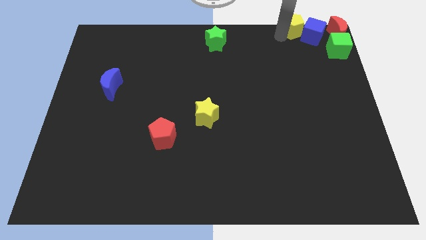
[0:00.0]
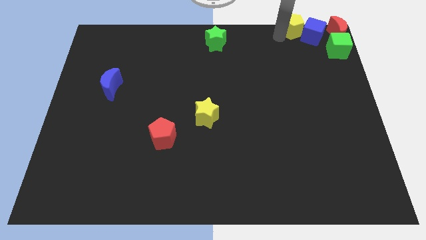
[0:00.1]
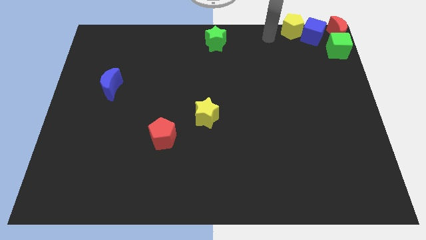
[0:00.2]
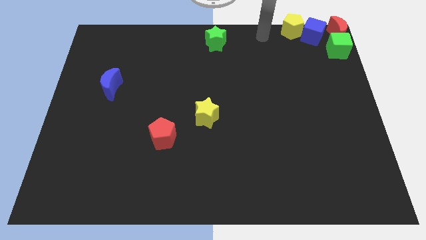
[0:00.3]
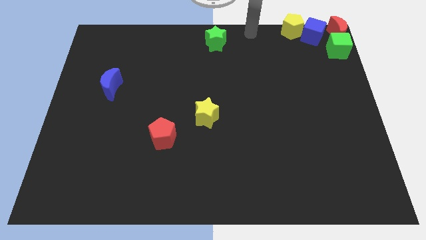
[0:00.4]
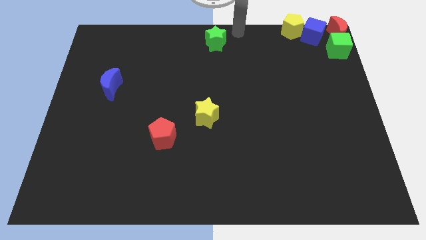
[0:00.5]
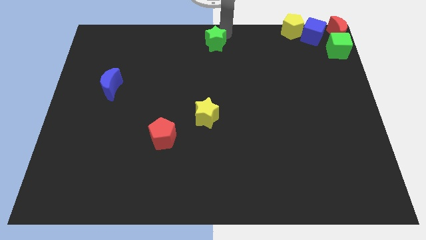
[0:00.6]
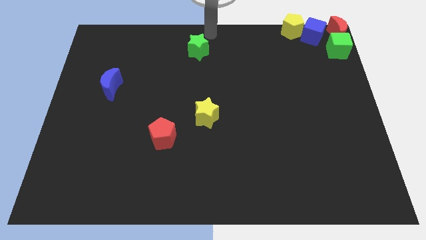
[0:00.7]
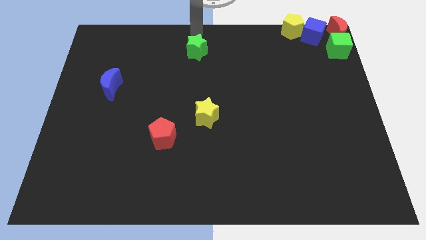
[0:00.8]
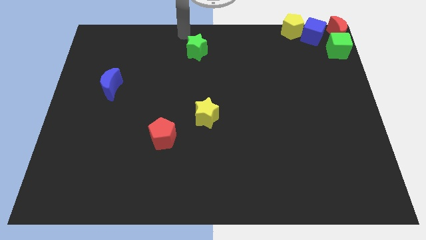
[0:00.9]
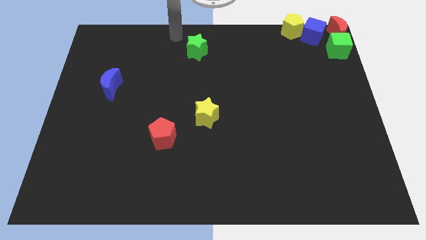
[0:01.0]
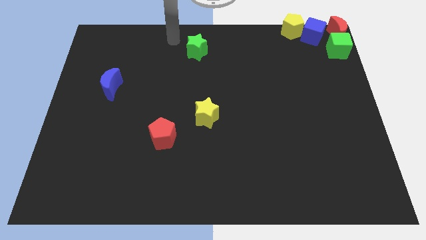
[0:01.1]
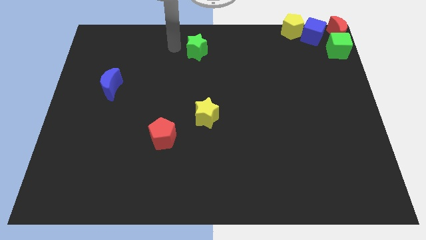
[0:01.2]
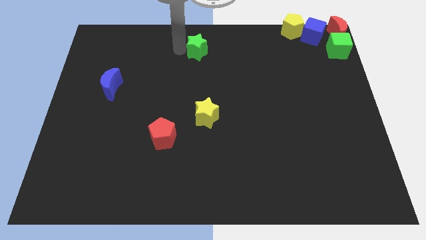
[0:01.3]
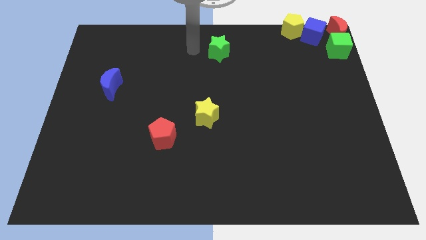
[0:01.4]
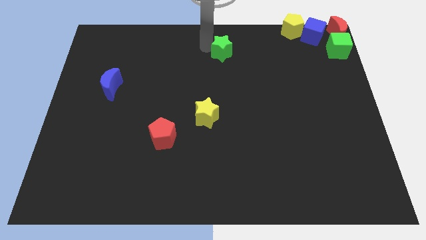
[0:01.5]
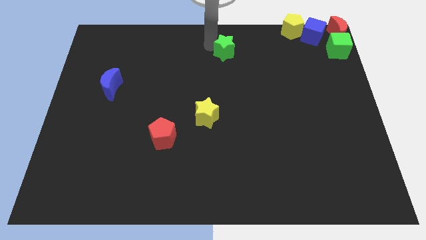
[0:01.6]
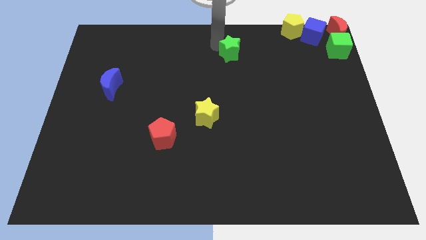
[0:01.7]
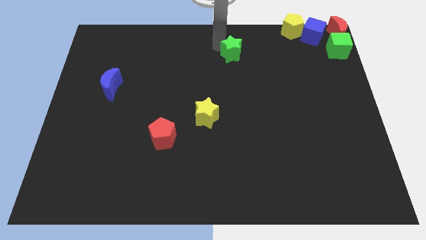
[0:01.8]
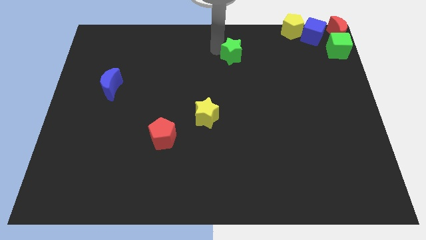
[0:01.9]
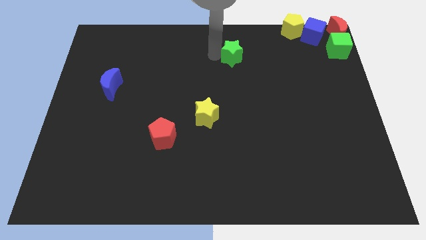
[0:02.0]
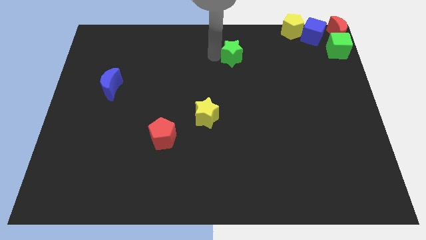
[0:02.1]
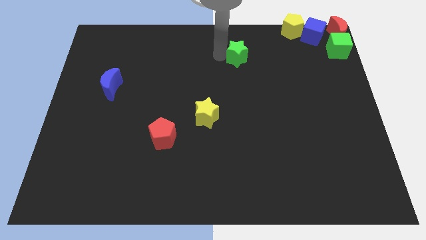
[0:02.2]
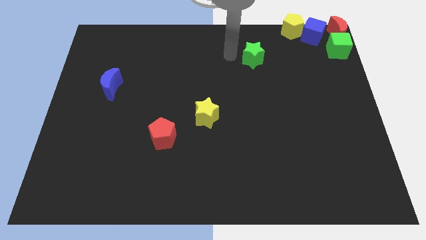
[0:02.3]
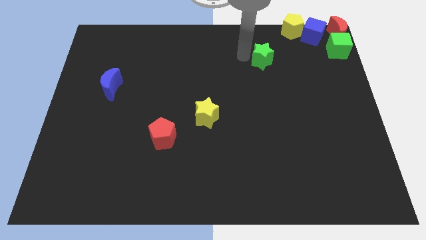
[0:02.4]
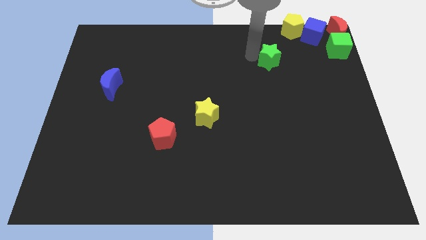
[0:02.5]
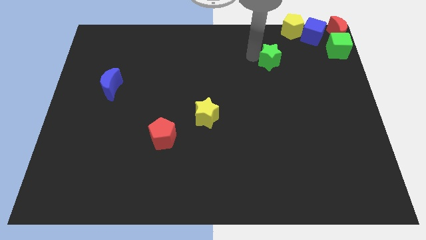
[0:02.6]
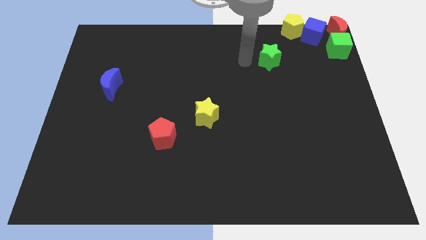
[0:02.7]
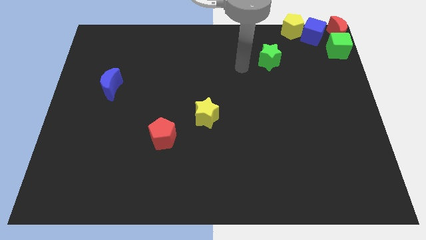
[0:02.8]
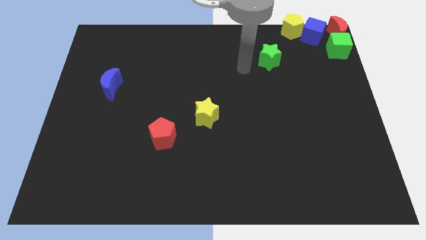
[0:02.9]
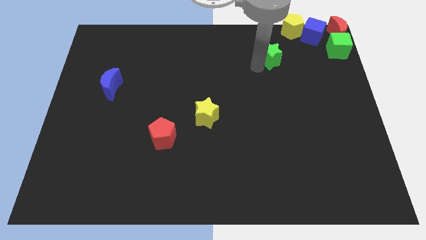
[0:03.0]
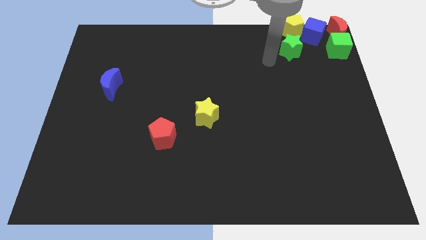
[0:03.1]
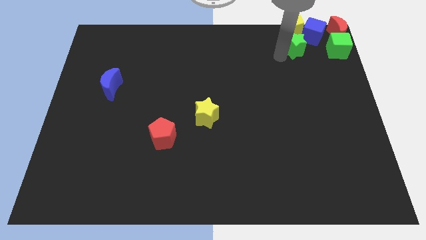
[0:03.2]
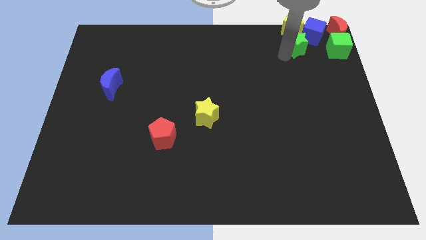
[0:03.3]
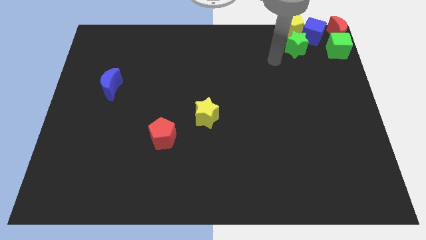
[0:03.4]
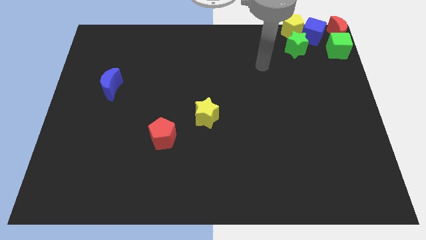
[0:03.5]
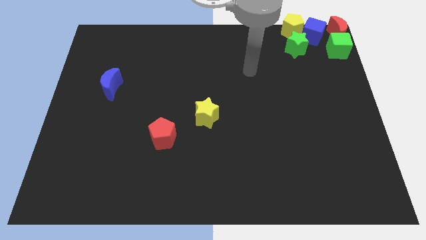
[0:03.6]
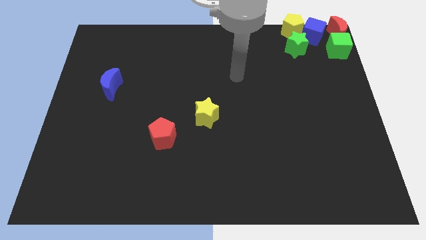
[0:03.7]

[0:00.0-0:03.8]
move green star below left to blue cube

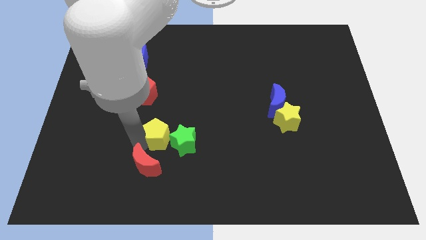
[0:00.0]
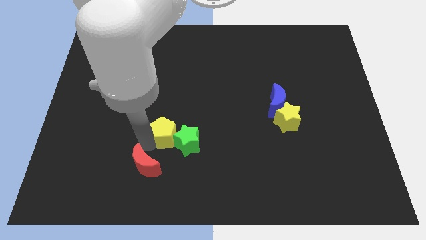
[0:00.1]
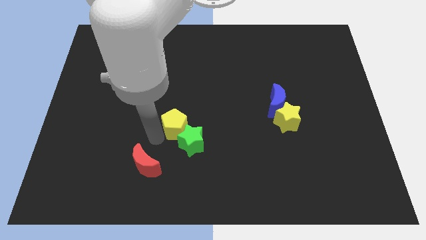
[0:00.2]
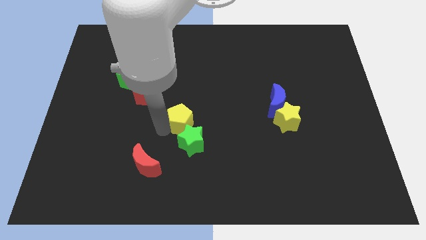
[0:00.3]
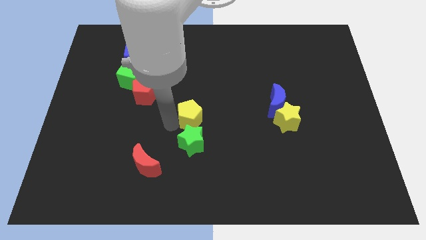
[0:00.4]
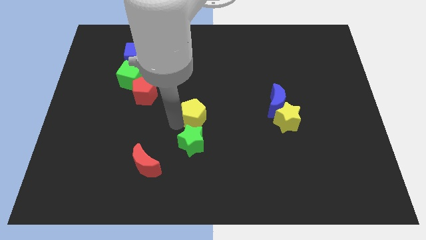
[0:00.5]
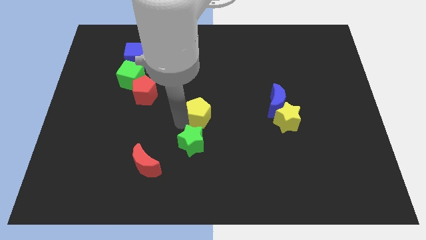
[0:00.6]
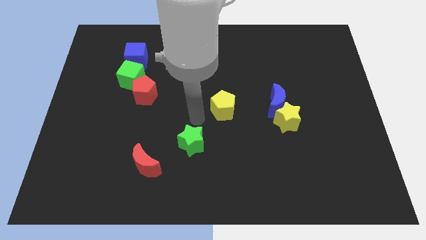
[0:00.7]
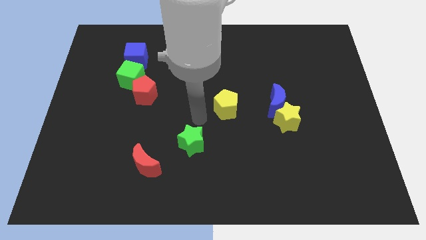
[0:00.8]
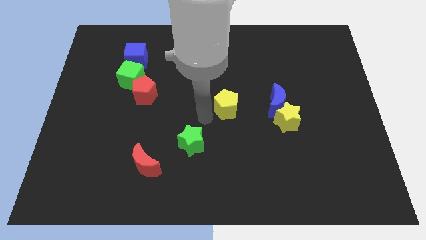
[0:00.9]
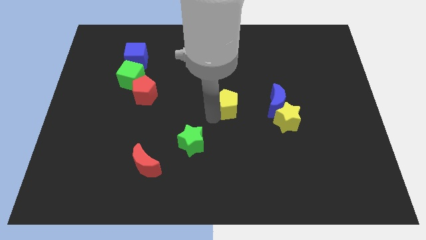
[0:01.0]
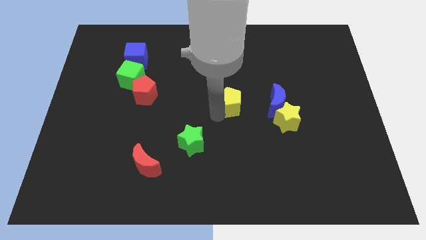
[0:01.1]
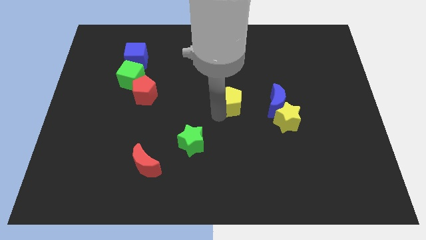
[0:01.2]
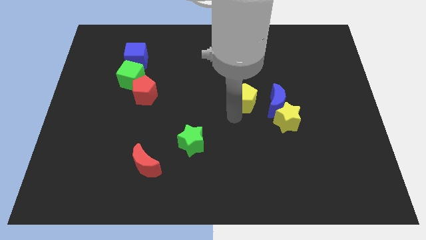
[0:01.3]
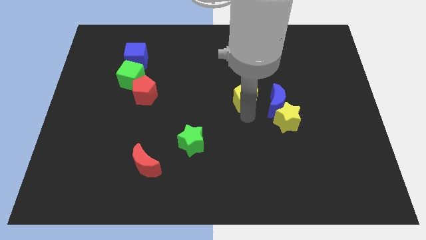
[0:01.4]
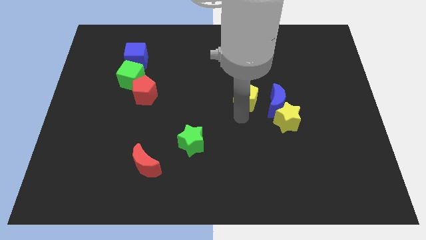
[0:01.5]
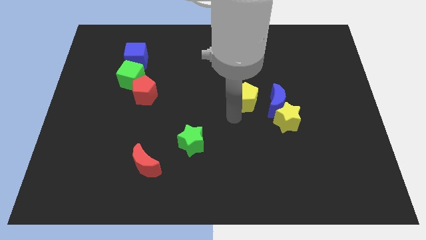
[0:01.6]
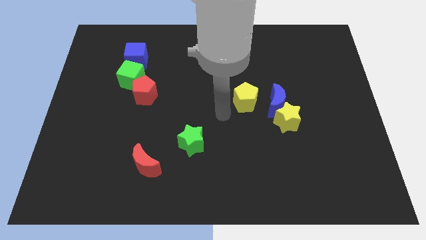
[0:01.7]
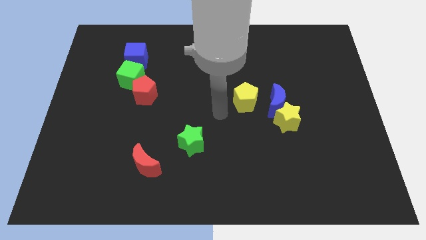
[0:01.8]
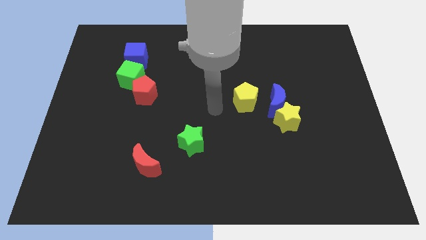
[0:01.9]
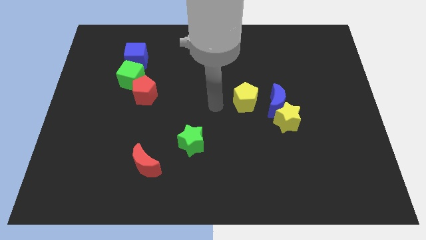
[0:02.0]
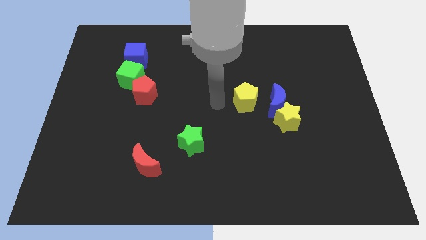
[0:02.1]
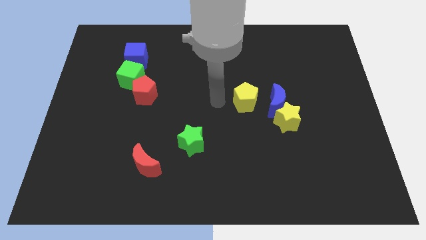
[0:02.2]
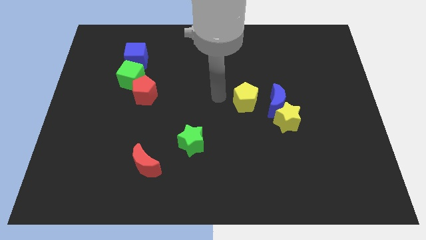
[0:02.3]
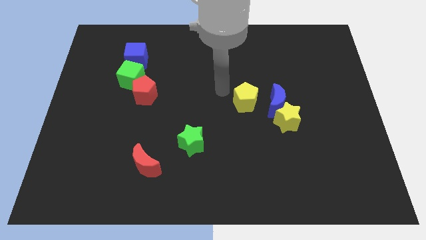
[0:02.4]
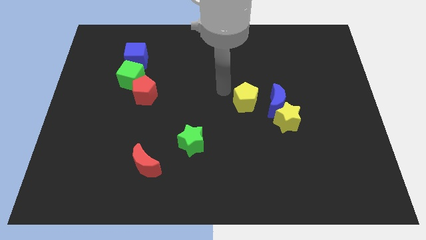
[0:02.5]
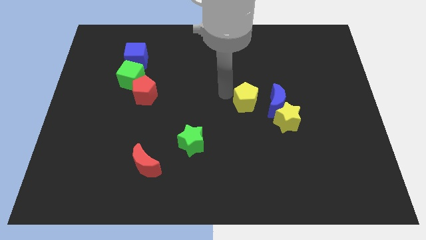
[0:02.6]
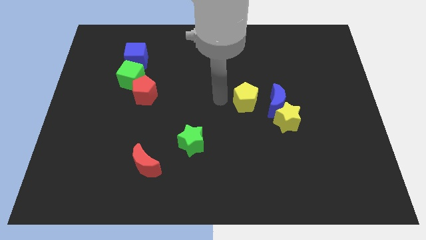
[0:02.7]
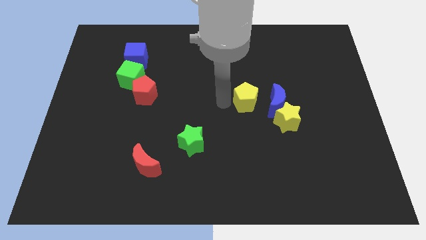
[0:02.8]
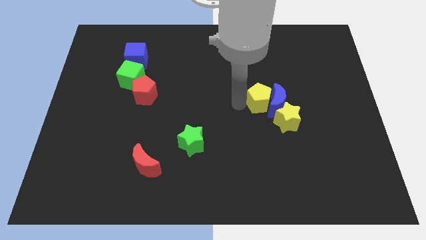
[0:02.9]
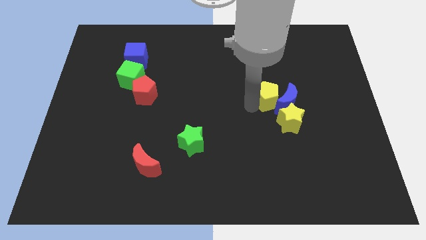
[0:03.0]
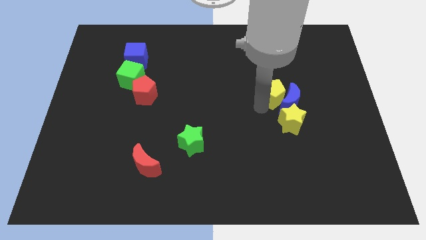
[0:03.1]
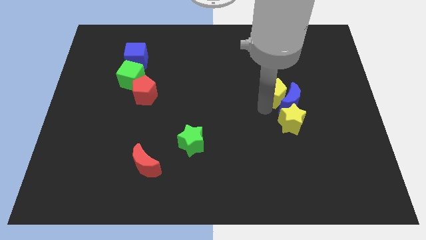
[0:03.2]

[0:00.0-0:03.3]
move the yellow pentagon into the left side of the blue crescent

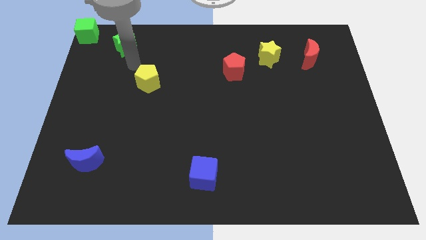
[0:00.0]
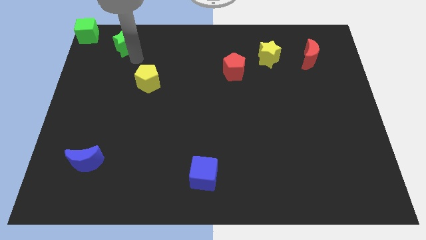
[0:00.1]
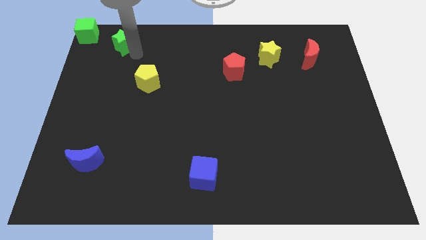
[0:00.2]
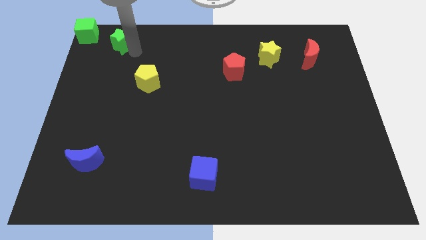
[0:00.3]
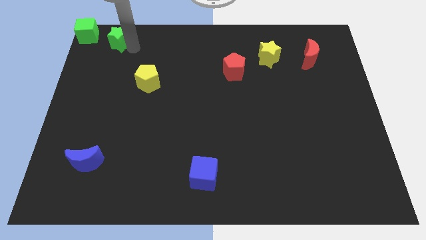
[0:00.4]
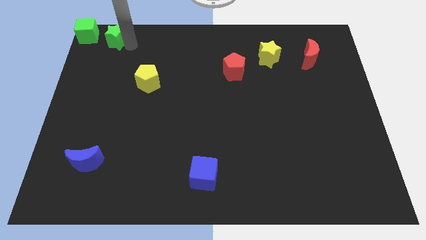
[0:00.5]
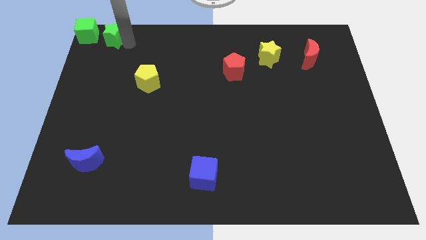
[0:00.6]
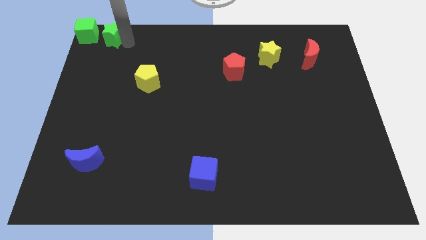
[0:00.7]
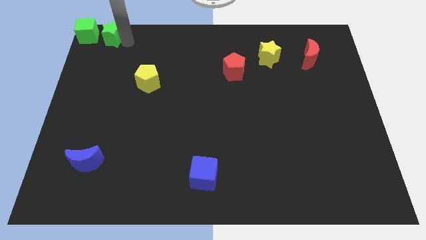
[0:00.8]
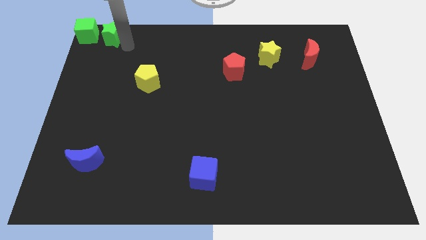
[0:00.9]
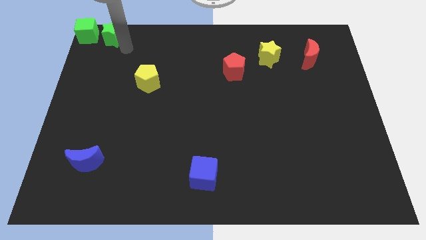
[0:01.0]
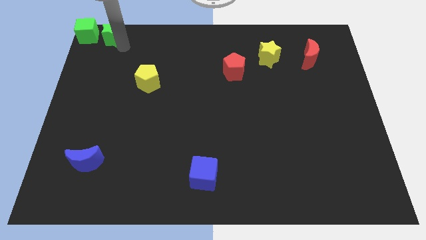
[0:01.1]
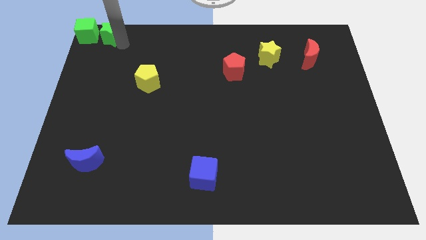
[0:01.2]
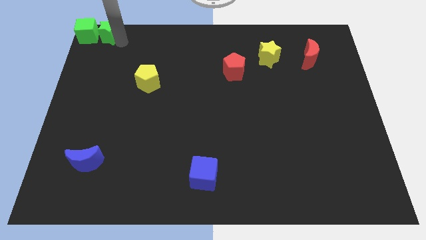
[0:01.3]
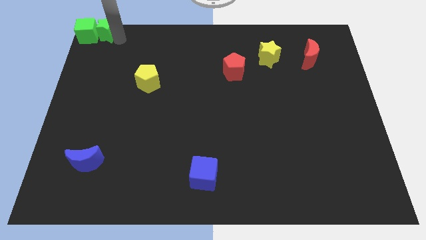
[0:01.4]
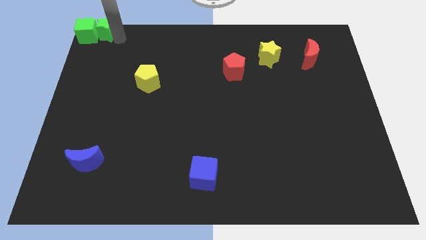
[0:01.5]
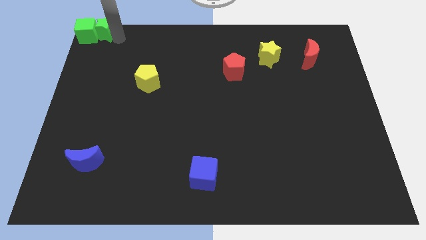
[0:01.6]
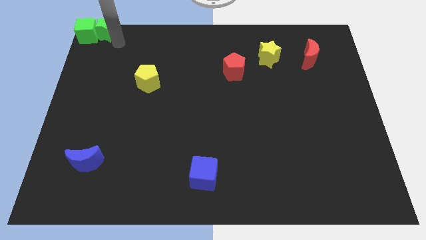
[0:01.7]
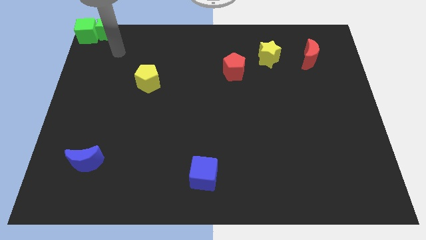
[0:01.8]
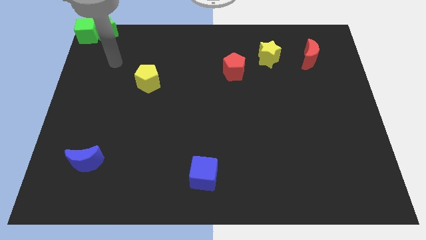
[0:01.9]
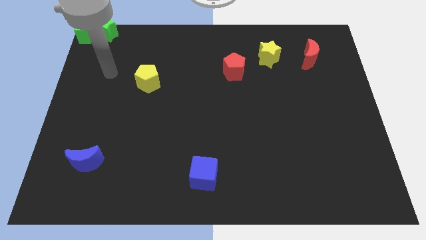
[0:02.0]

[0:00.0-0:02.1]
move green star to the top left
